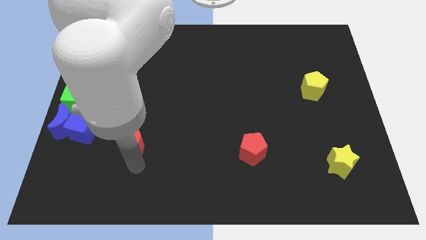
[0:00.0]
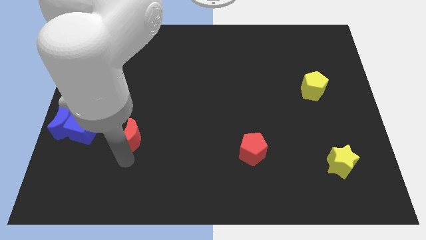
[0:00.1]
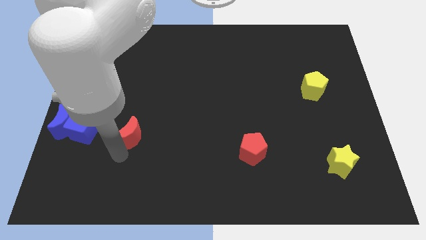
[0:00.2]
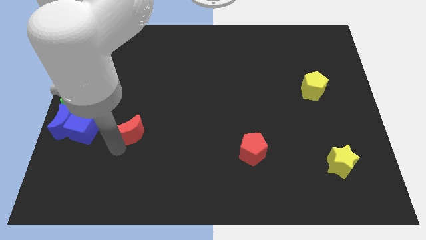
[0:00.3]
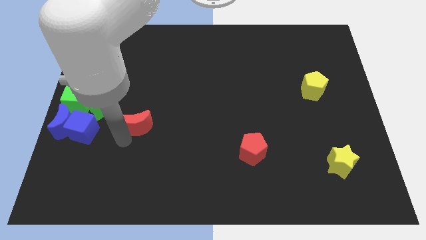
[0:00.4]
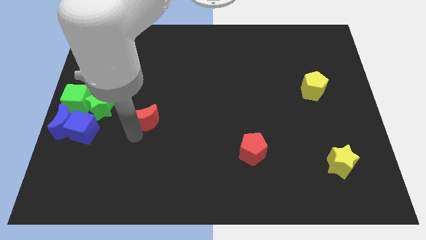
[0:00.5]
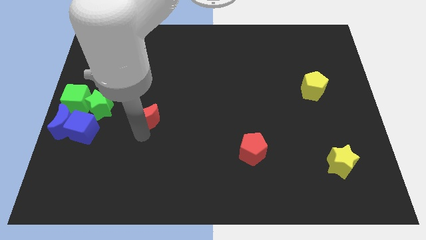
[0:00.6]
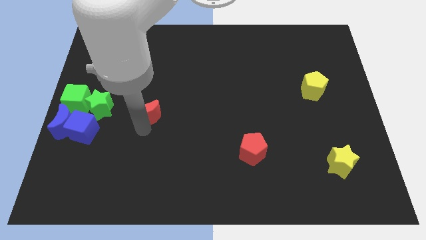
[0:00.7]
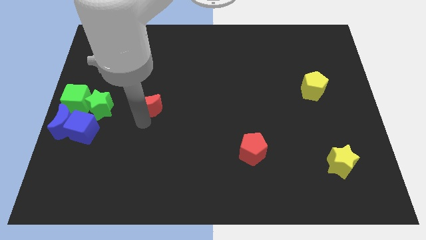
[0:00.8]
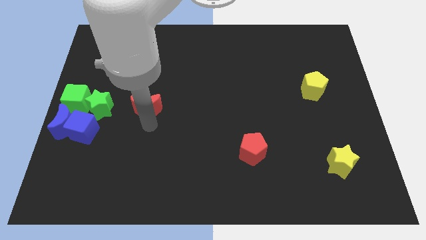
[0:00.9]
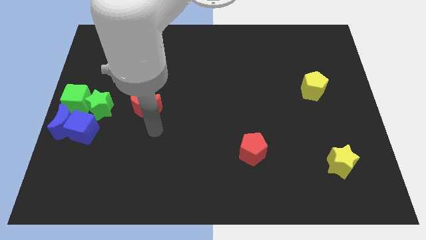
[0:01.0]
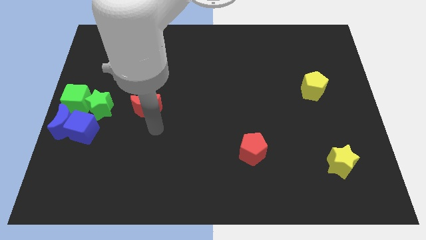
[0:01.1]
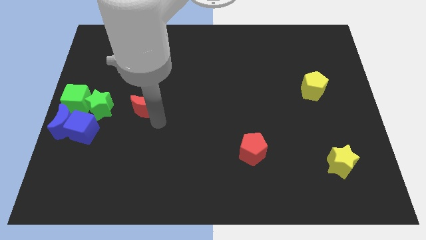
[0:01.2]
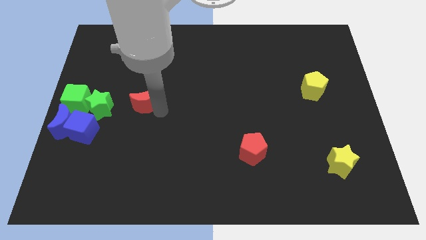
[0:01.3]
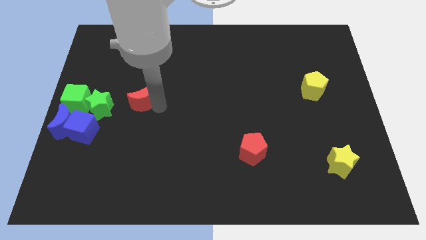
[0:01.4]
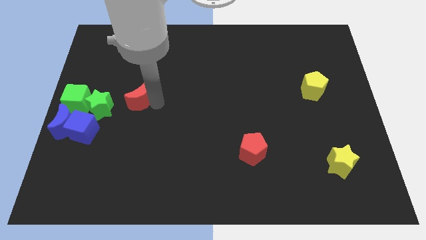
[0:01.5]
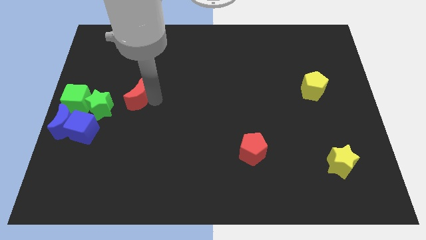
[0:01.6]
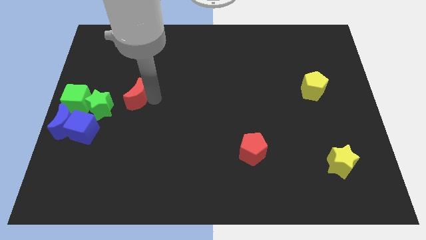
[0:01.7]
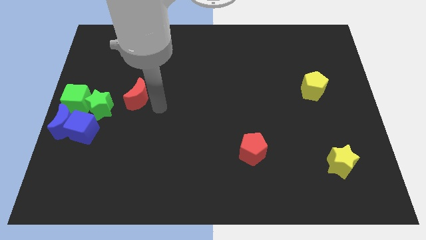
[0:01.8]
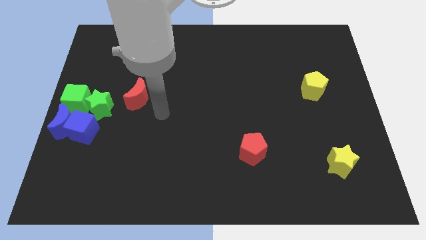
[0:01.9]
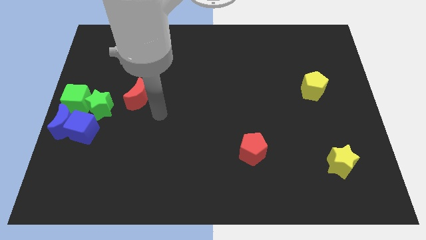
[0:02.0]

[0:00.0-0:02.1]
move the red crescent towards the green star

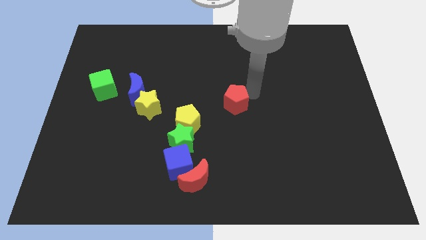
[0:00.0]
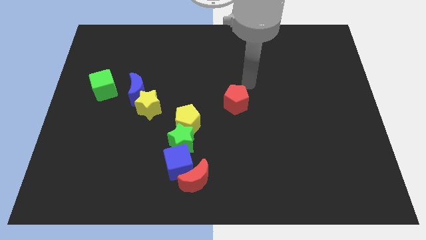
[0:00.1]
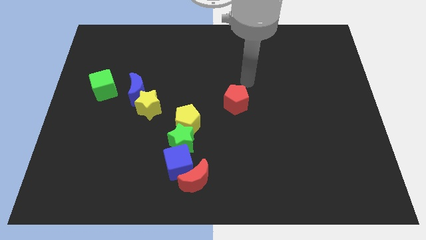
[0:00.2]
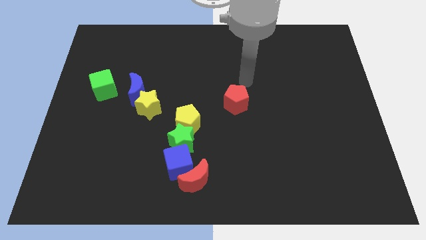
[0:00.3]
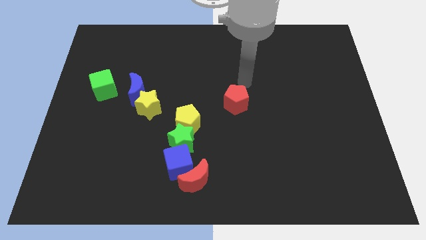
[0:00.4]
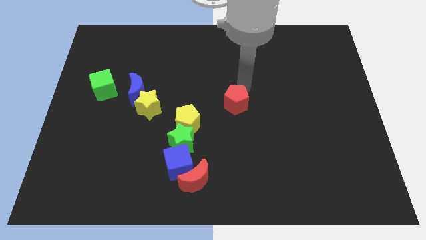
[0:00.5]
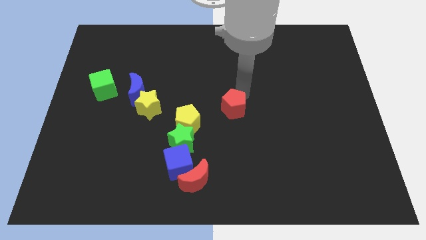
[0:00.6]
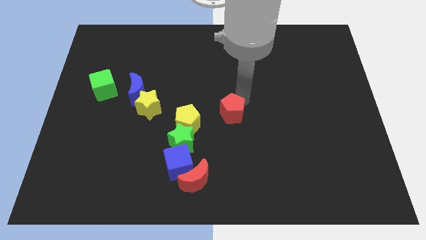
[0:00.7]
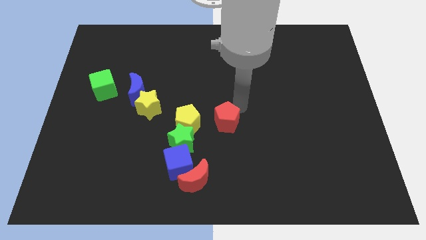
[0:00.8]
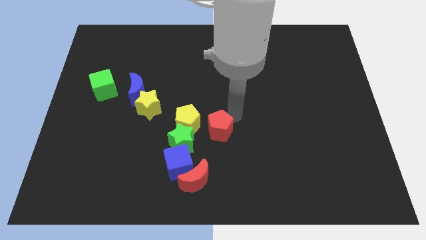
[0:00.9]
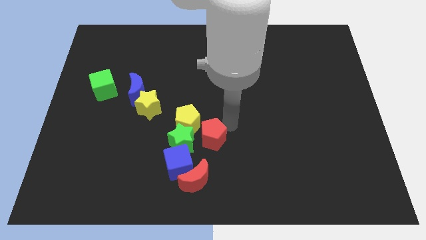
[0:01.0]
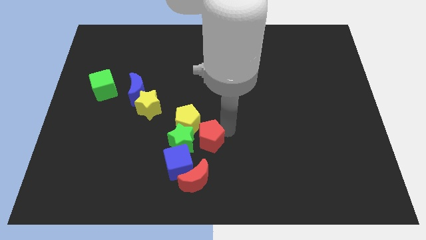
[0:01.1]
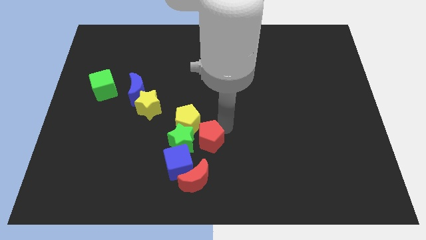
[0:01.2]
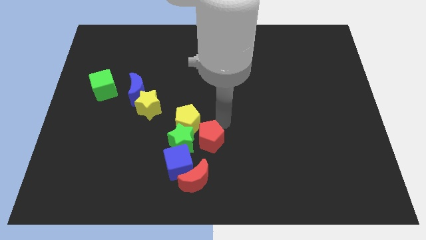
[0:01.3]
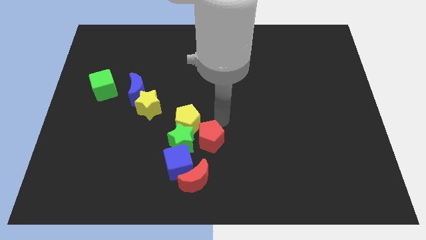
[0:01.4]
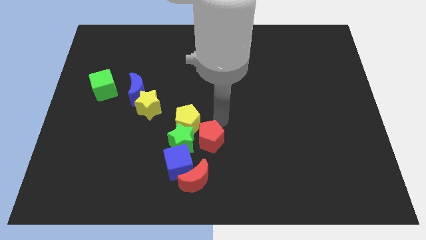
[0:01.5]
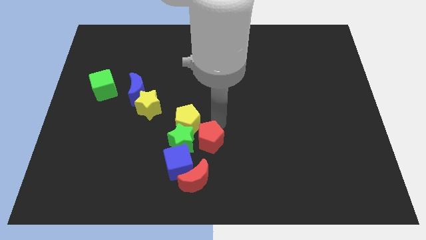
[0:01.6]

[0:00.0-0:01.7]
move the red pentagon right to the green star

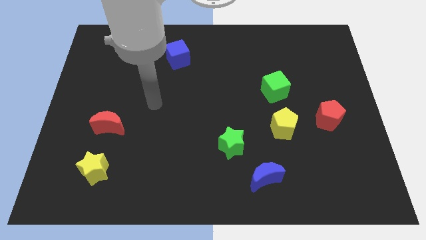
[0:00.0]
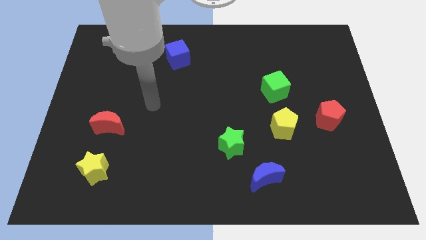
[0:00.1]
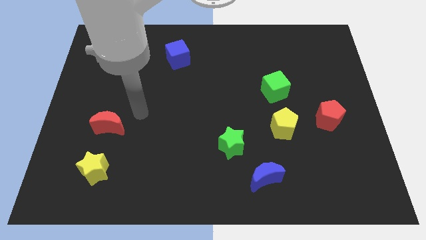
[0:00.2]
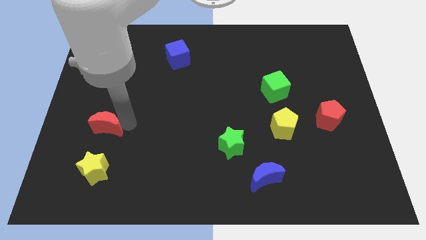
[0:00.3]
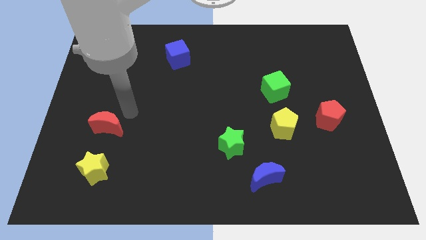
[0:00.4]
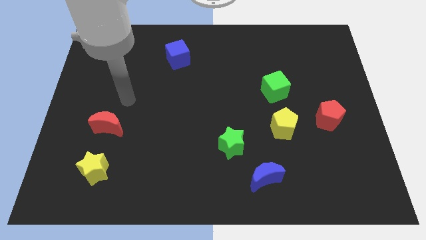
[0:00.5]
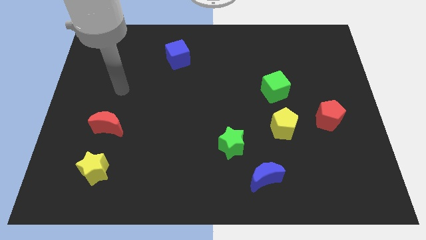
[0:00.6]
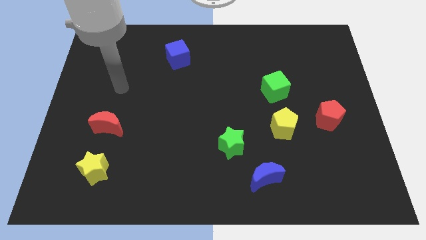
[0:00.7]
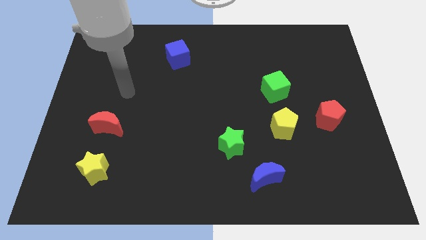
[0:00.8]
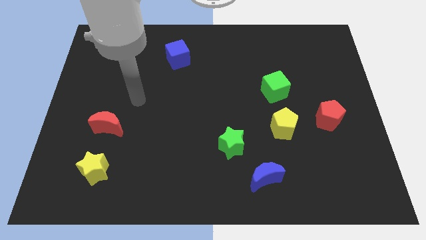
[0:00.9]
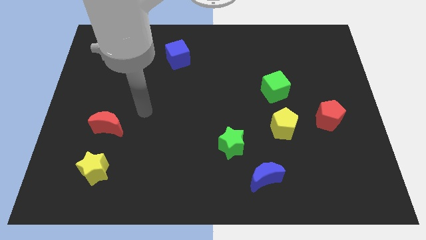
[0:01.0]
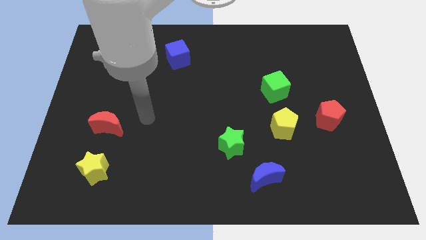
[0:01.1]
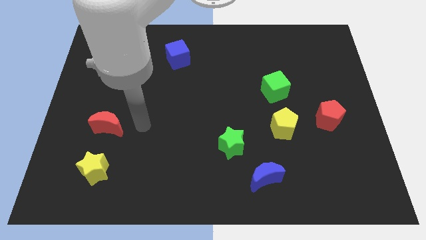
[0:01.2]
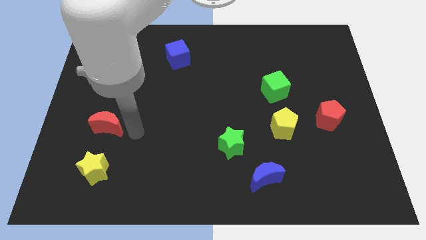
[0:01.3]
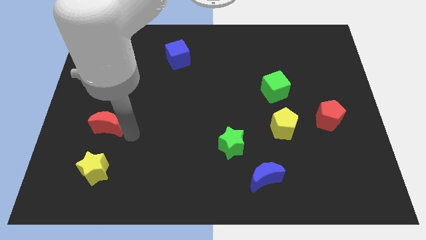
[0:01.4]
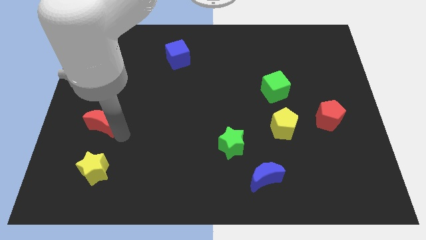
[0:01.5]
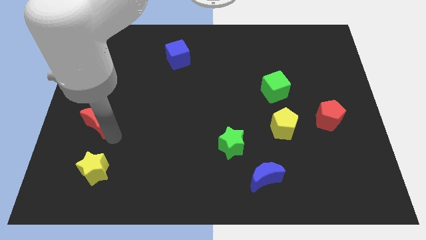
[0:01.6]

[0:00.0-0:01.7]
slightly move the red moon to the left side of the board

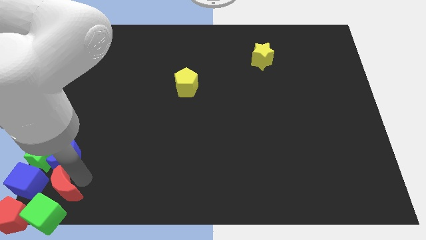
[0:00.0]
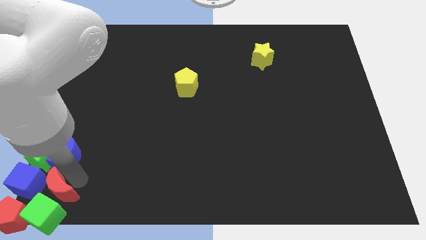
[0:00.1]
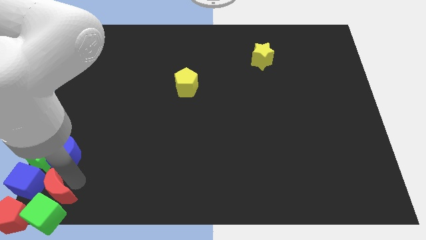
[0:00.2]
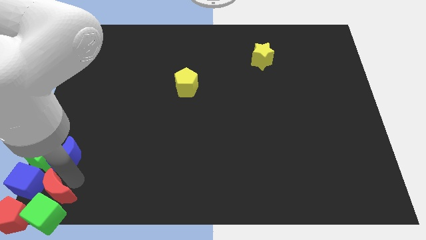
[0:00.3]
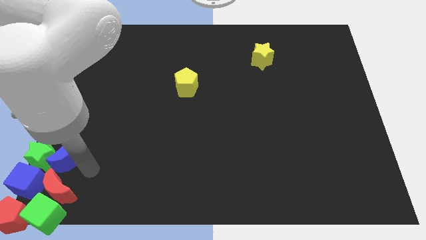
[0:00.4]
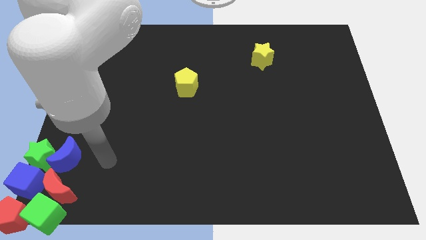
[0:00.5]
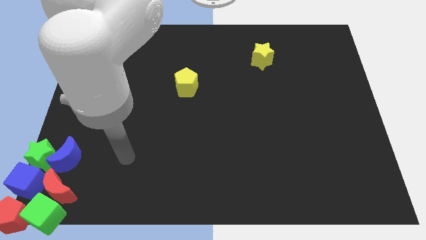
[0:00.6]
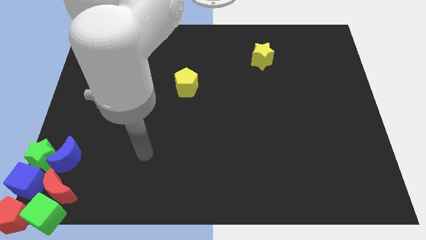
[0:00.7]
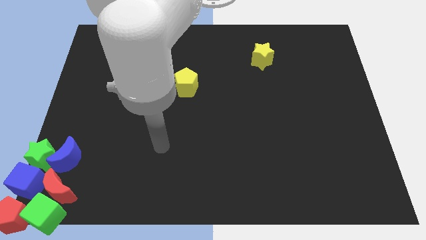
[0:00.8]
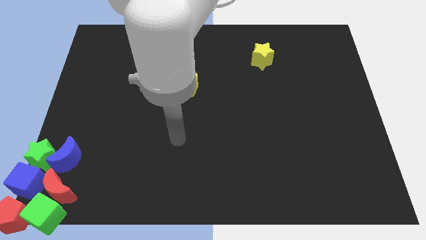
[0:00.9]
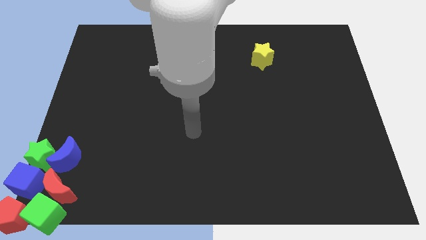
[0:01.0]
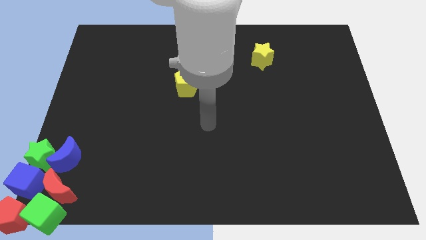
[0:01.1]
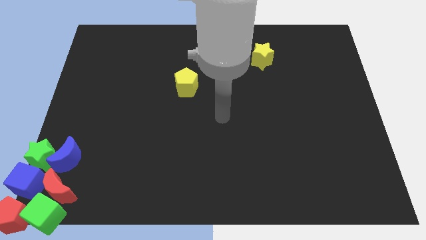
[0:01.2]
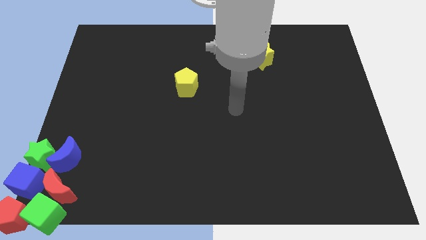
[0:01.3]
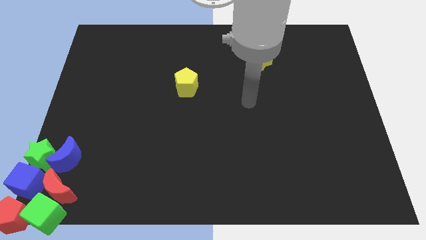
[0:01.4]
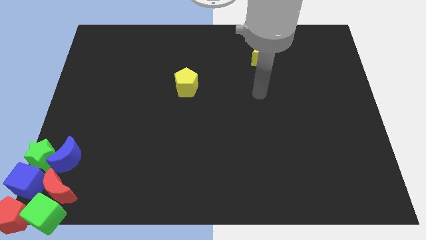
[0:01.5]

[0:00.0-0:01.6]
move your arm away from the red moon

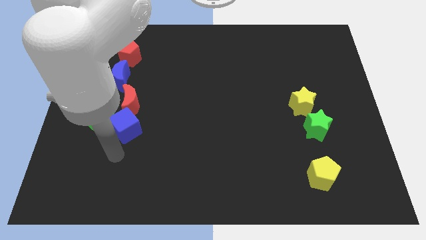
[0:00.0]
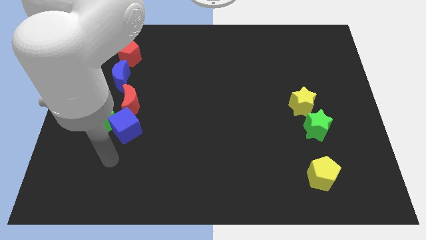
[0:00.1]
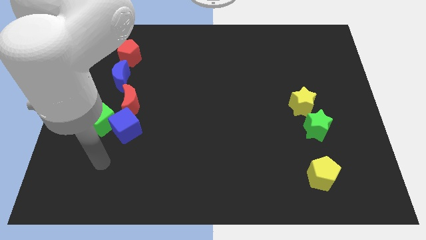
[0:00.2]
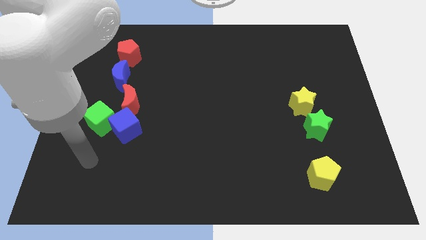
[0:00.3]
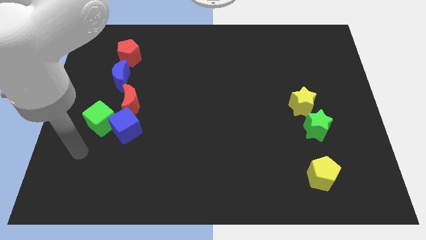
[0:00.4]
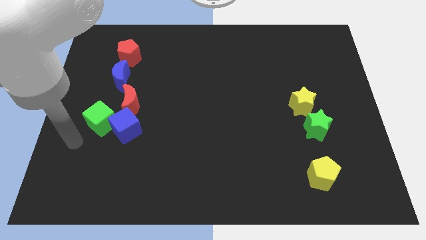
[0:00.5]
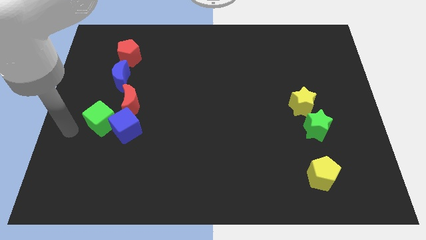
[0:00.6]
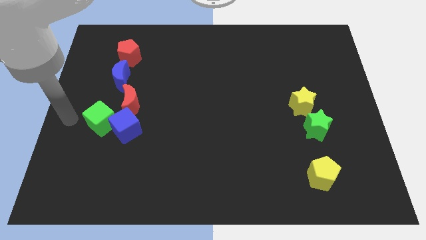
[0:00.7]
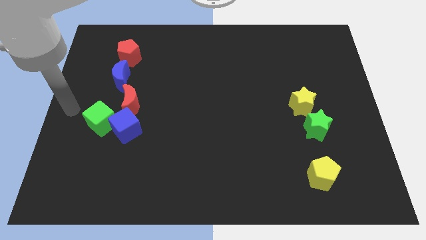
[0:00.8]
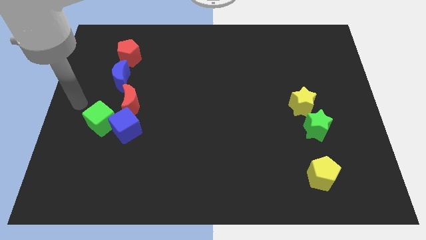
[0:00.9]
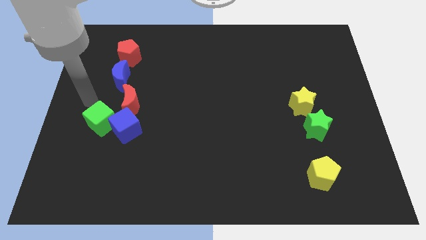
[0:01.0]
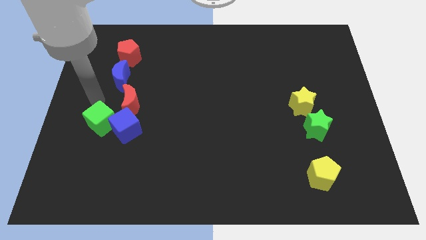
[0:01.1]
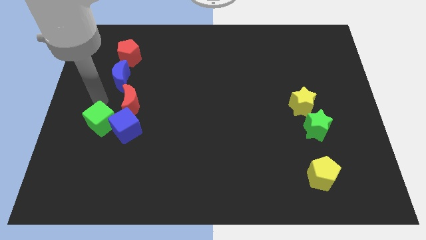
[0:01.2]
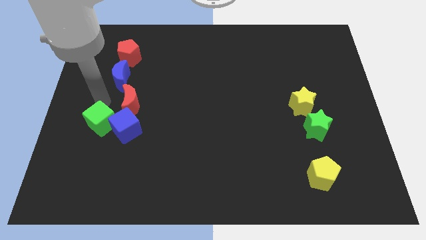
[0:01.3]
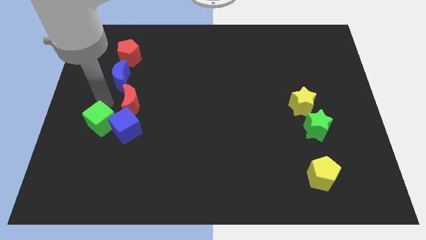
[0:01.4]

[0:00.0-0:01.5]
move your arm to the top of green cube

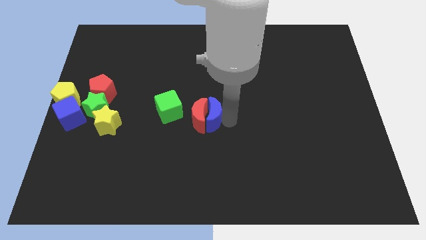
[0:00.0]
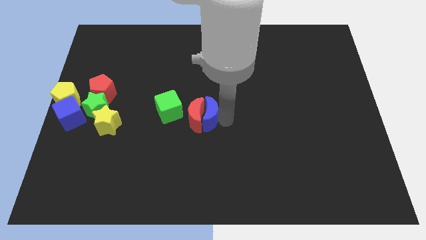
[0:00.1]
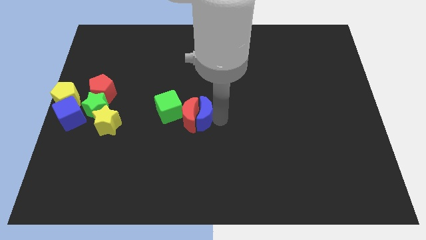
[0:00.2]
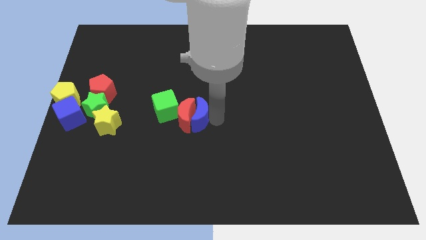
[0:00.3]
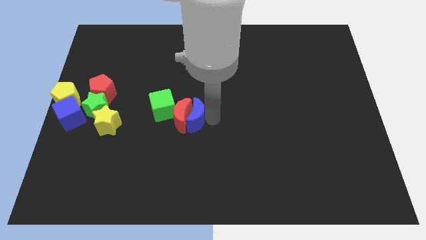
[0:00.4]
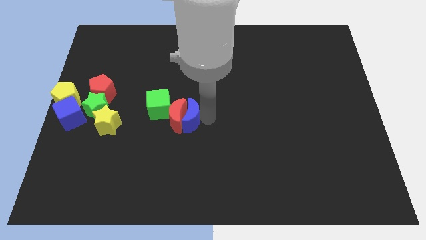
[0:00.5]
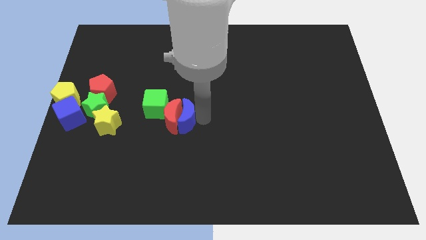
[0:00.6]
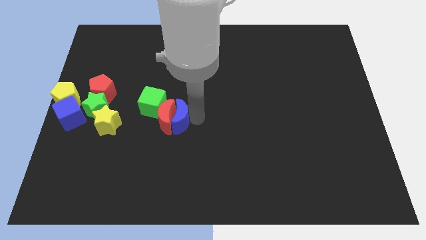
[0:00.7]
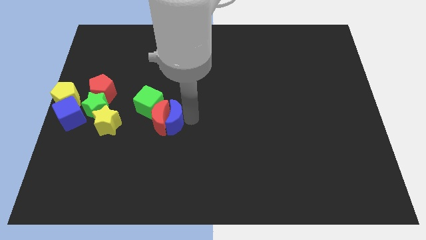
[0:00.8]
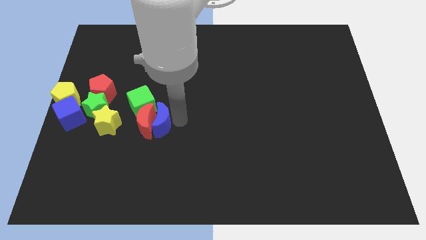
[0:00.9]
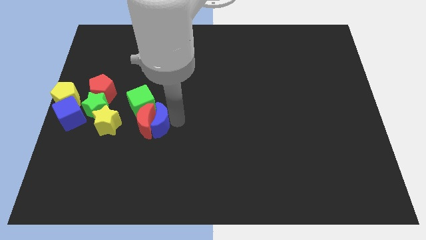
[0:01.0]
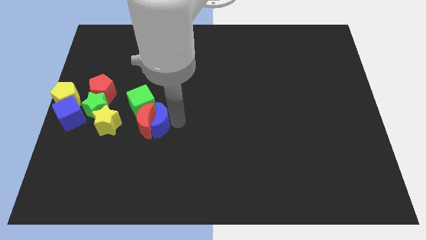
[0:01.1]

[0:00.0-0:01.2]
push the both crescents into the green cube
